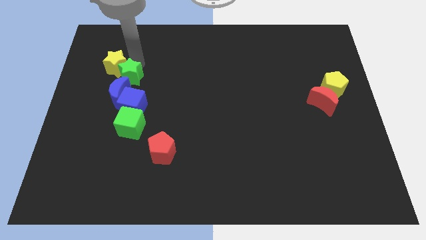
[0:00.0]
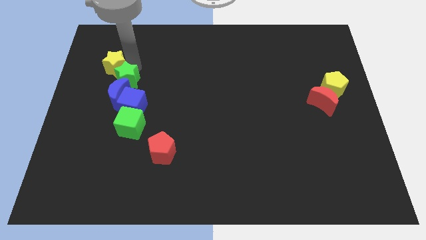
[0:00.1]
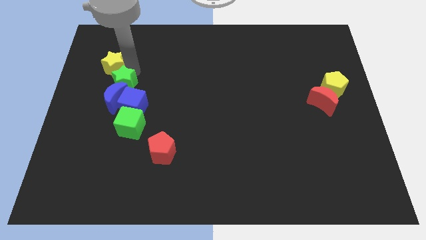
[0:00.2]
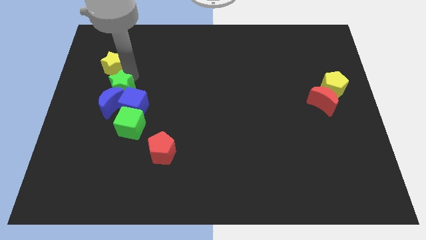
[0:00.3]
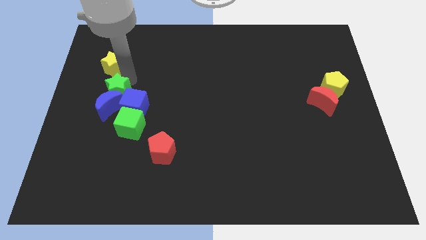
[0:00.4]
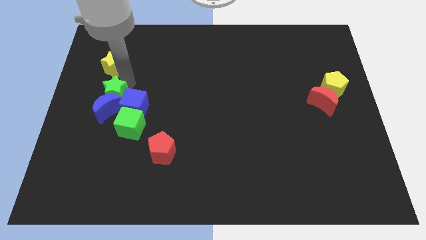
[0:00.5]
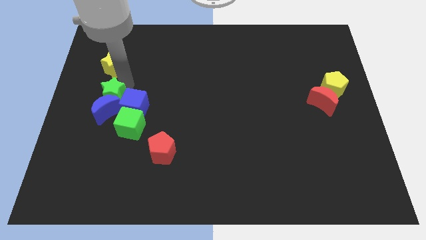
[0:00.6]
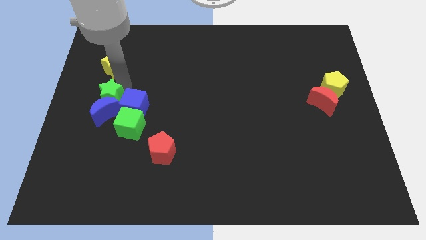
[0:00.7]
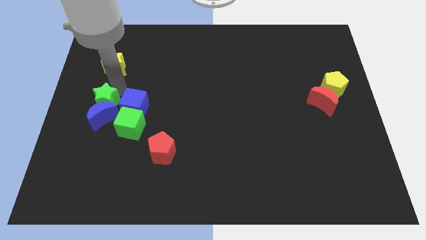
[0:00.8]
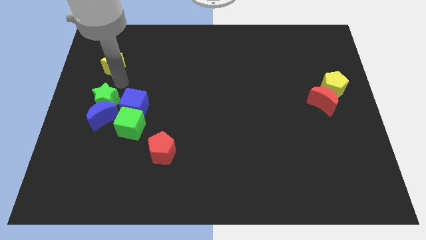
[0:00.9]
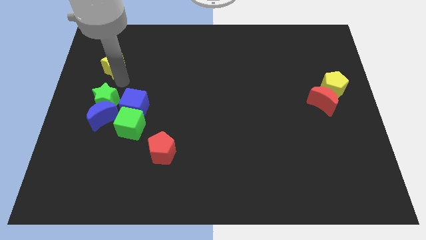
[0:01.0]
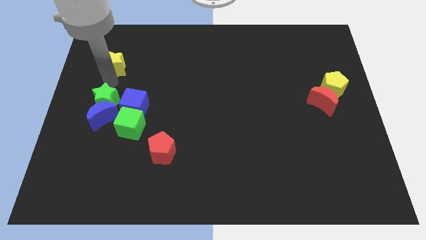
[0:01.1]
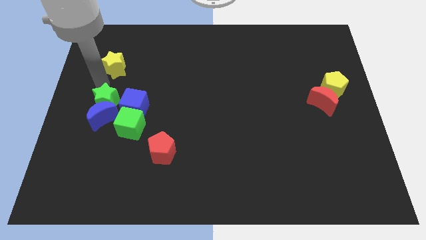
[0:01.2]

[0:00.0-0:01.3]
push the green star below the yellow star

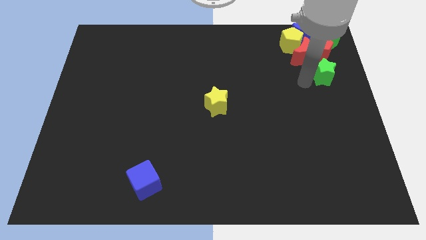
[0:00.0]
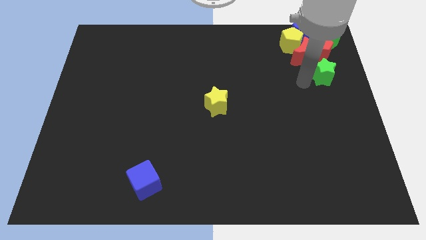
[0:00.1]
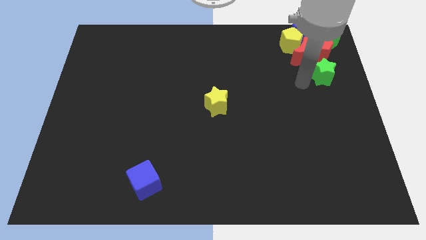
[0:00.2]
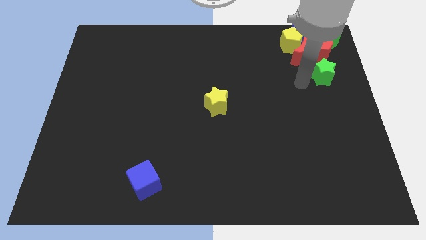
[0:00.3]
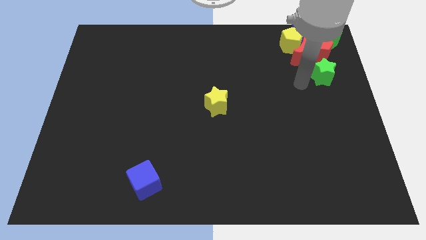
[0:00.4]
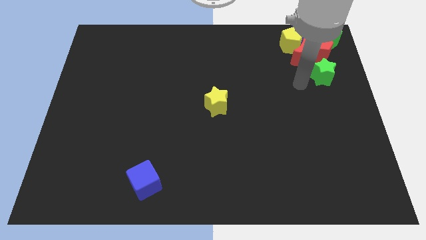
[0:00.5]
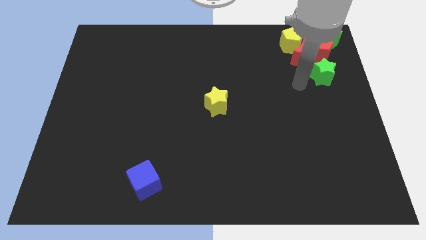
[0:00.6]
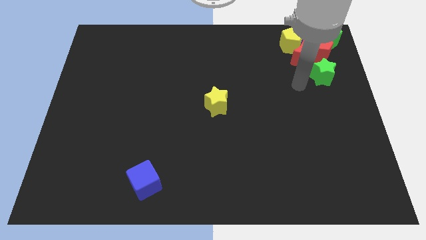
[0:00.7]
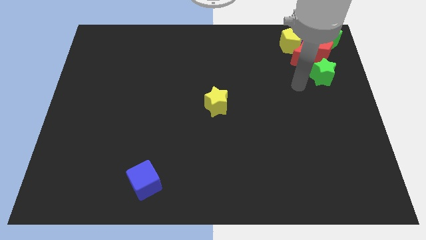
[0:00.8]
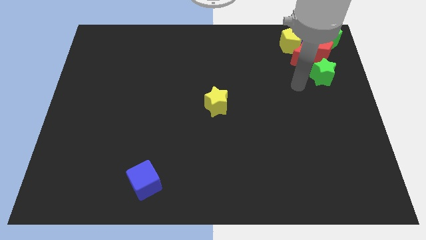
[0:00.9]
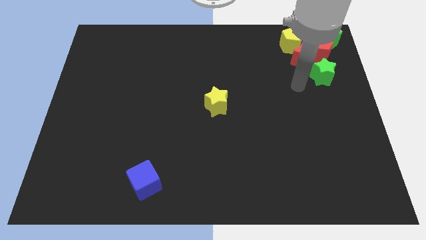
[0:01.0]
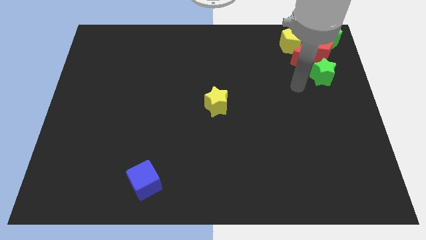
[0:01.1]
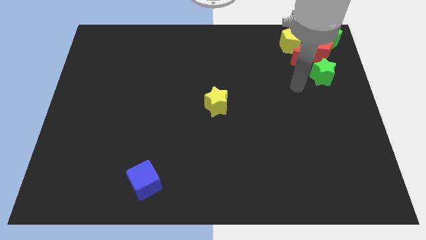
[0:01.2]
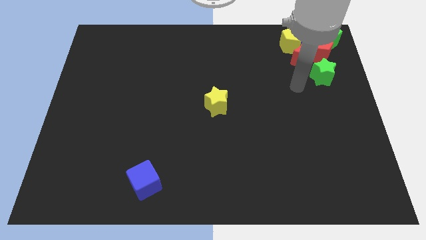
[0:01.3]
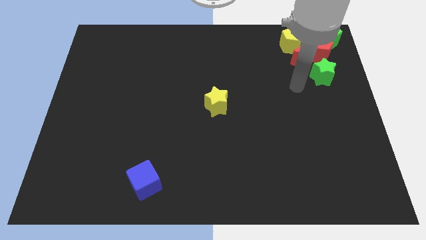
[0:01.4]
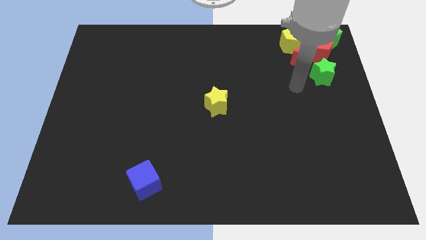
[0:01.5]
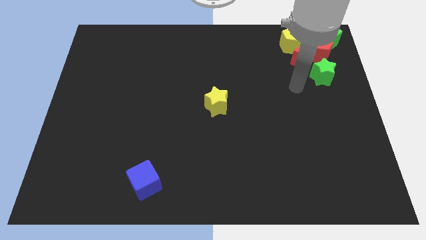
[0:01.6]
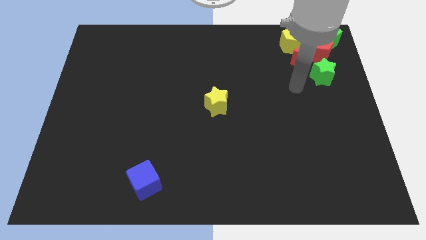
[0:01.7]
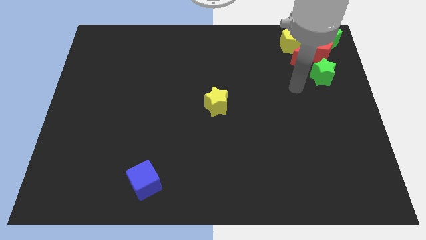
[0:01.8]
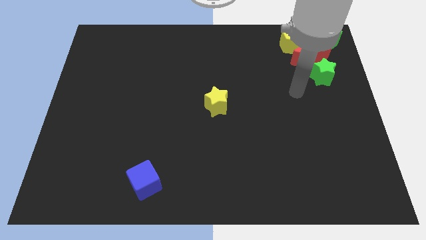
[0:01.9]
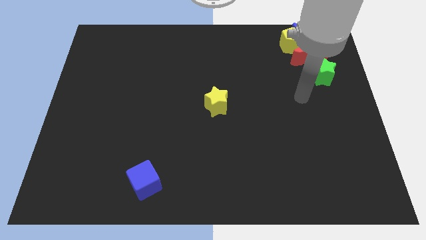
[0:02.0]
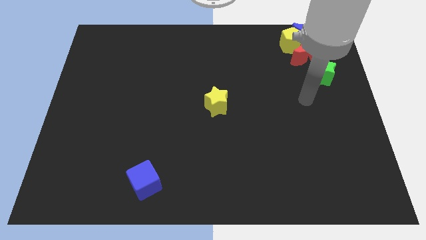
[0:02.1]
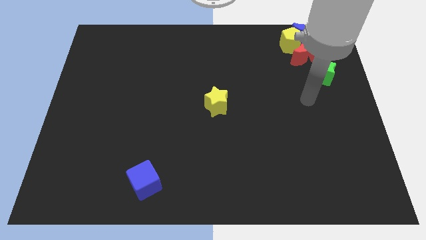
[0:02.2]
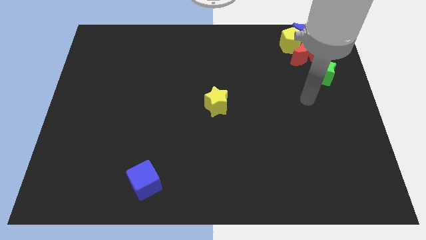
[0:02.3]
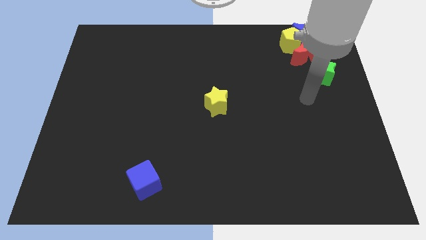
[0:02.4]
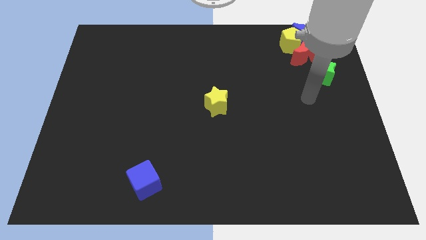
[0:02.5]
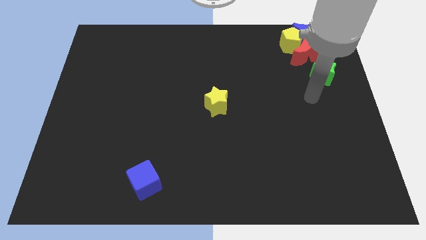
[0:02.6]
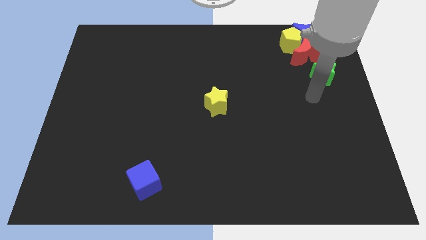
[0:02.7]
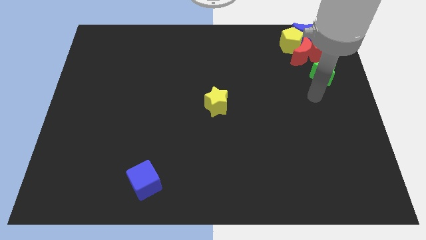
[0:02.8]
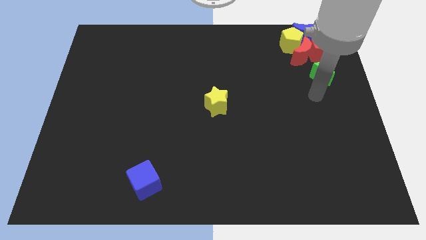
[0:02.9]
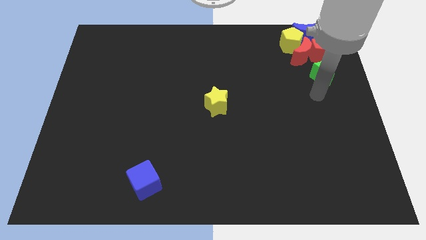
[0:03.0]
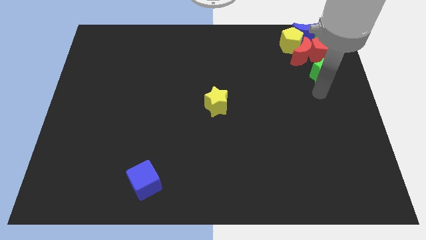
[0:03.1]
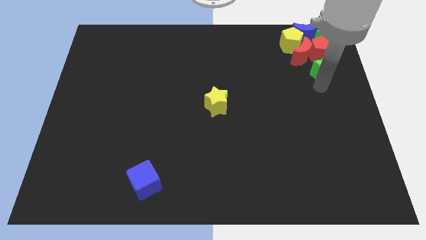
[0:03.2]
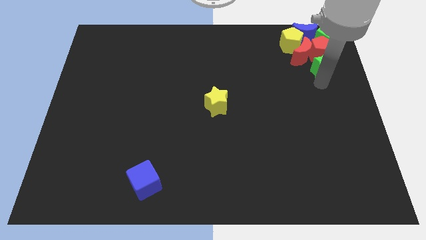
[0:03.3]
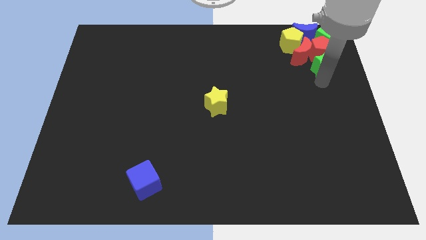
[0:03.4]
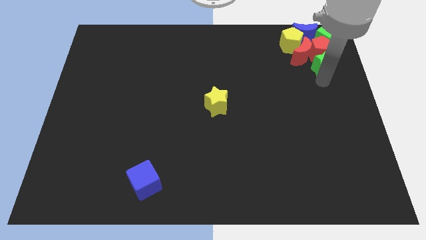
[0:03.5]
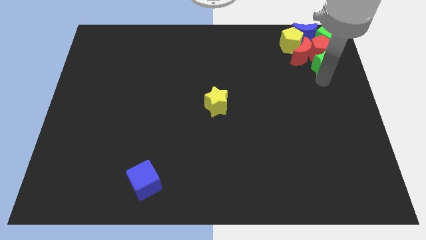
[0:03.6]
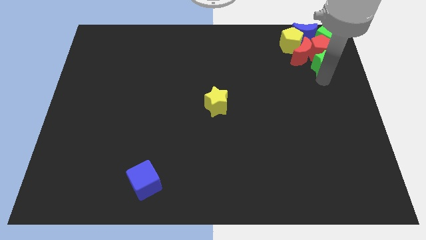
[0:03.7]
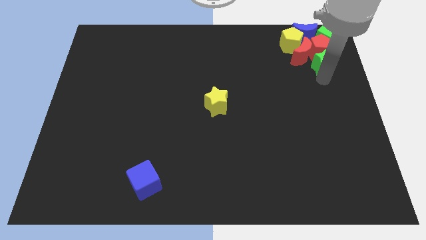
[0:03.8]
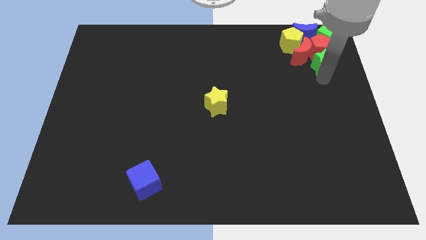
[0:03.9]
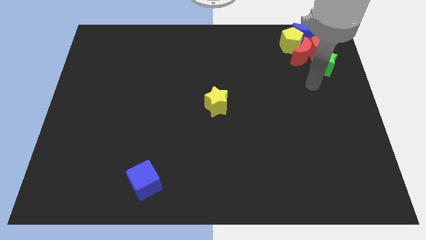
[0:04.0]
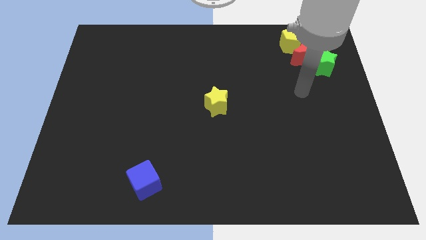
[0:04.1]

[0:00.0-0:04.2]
push the green star into the red pentagon

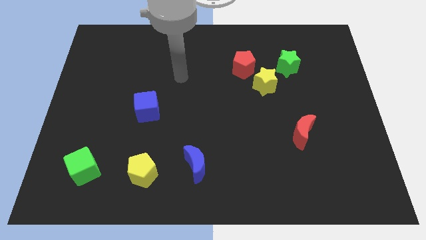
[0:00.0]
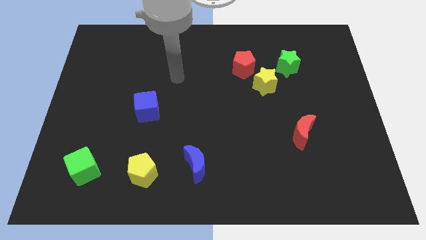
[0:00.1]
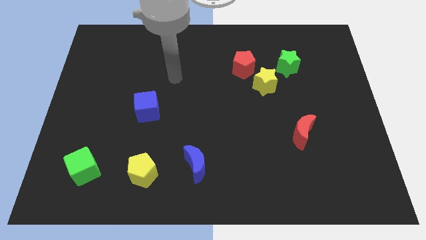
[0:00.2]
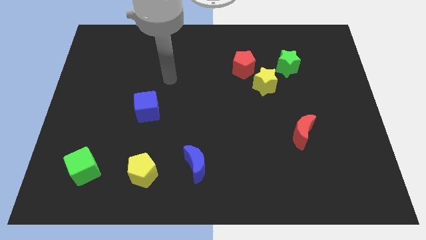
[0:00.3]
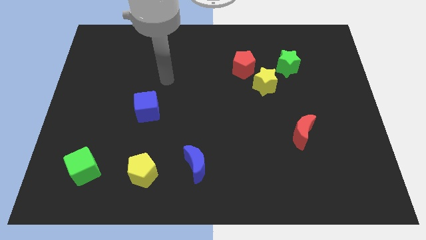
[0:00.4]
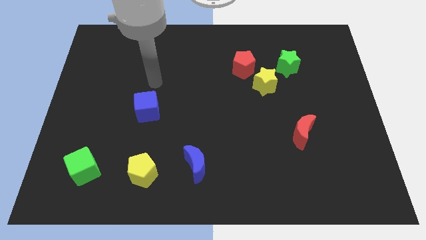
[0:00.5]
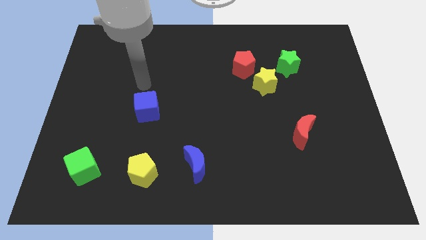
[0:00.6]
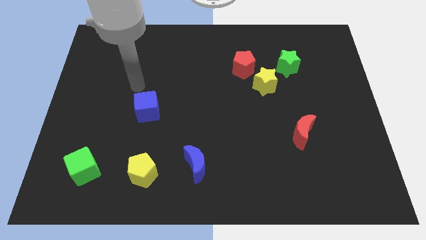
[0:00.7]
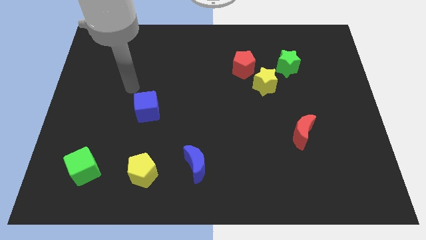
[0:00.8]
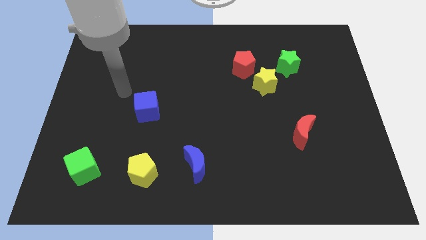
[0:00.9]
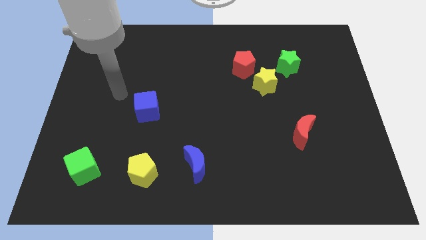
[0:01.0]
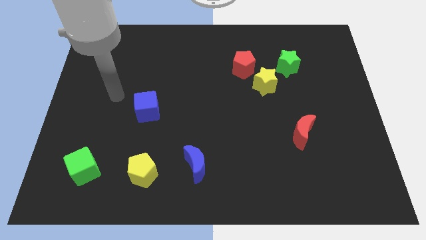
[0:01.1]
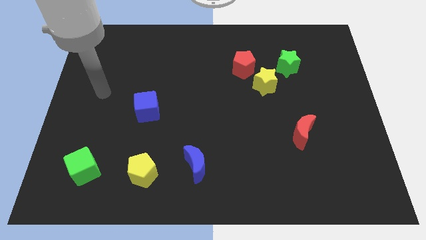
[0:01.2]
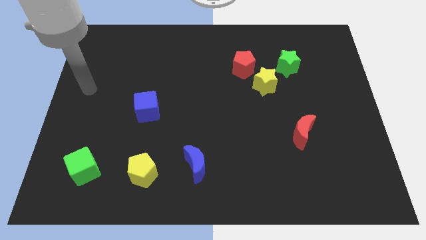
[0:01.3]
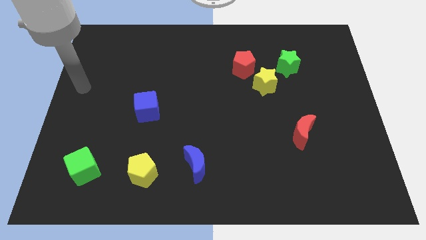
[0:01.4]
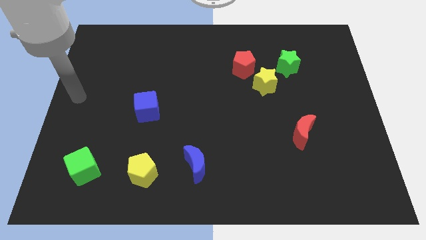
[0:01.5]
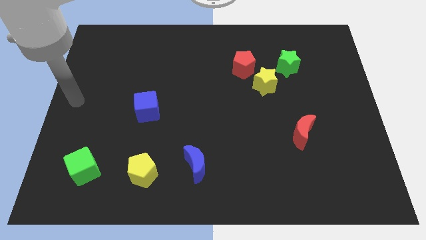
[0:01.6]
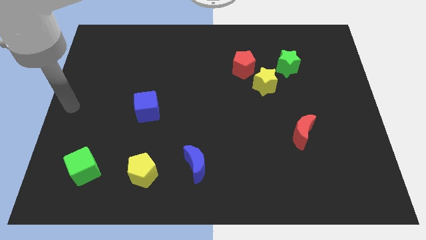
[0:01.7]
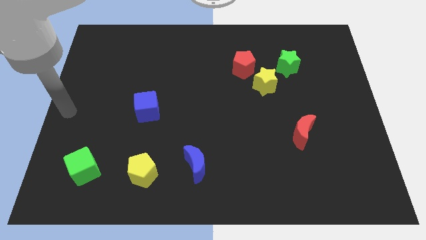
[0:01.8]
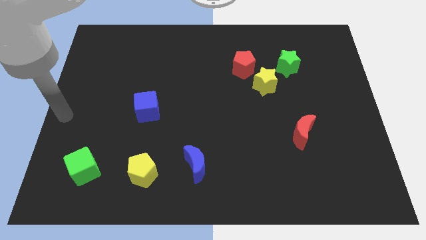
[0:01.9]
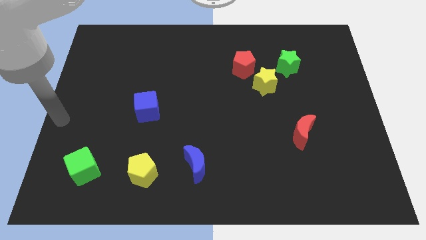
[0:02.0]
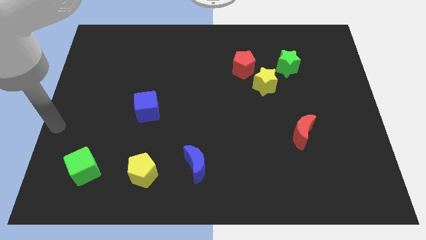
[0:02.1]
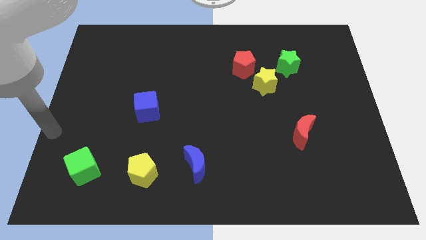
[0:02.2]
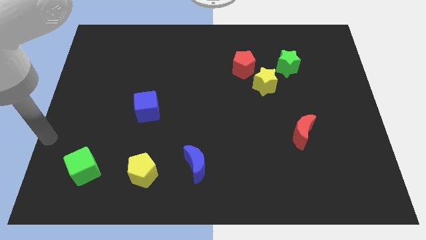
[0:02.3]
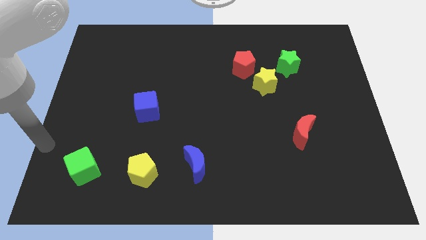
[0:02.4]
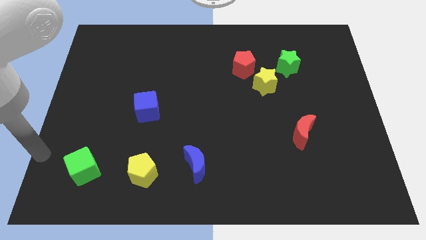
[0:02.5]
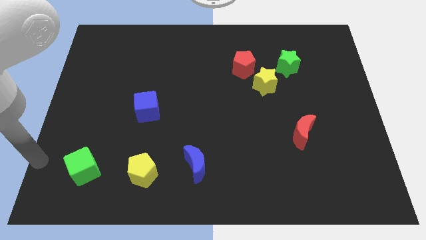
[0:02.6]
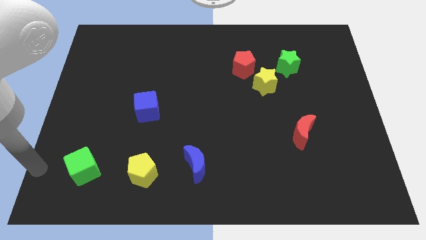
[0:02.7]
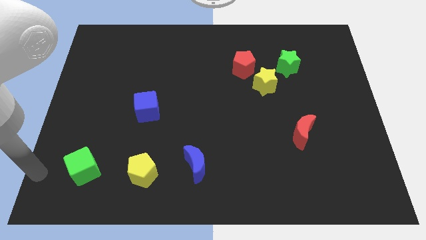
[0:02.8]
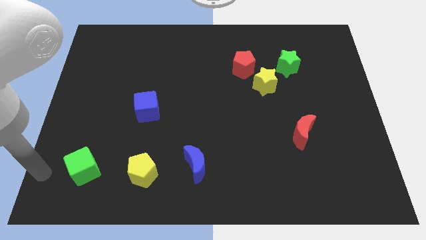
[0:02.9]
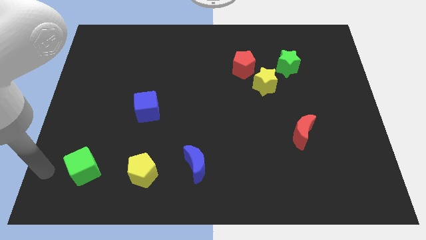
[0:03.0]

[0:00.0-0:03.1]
move your hand to the left side of the green cube

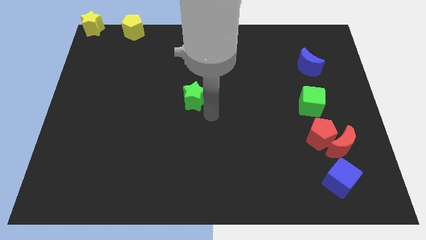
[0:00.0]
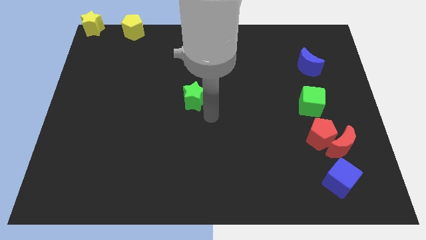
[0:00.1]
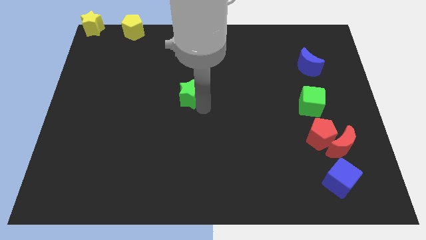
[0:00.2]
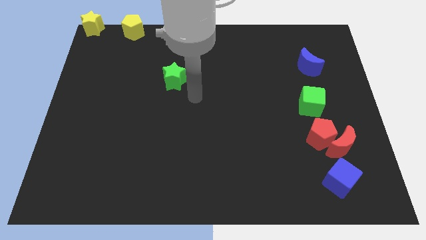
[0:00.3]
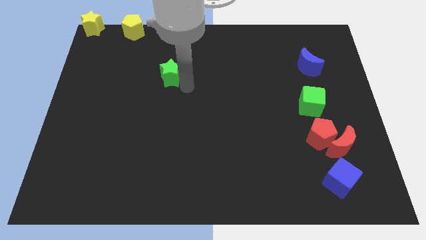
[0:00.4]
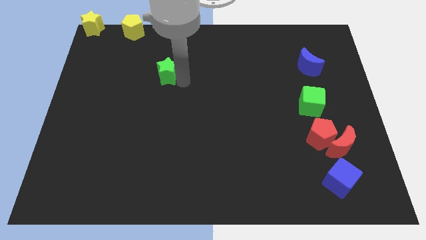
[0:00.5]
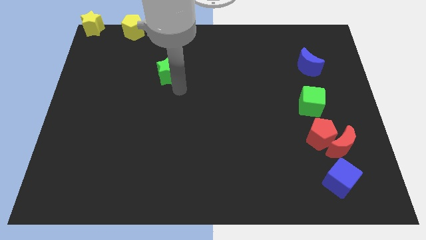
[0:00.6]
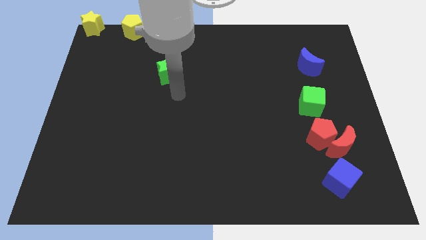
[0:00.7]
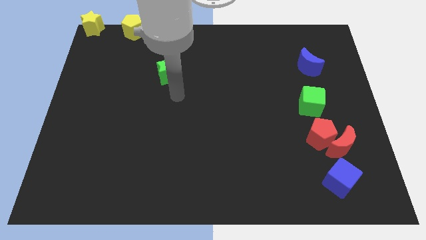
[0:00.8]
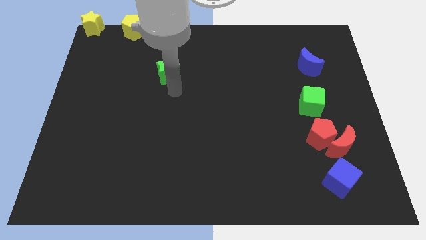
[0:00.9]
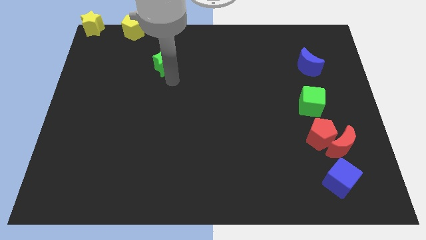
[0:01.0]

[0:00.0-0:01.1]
place the green star diagonal to the yellow pentagon
